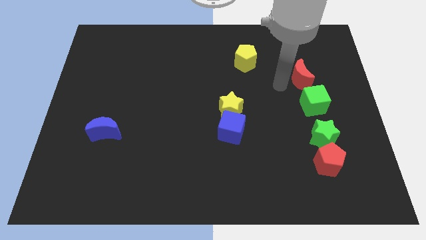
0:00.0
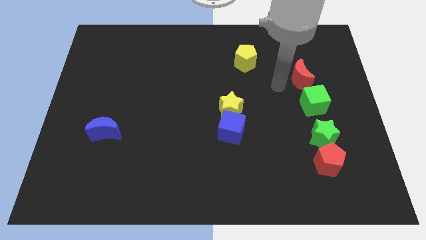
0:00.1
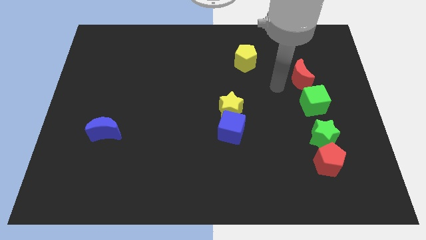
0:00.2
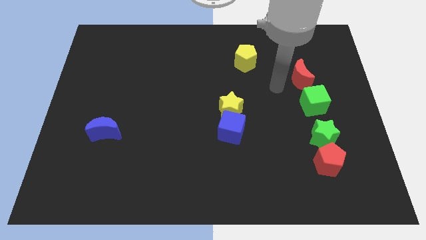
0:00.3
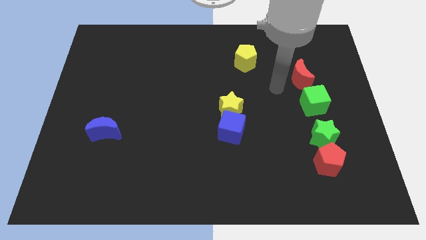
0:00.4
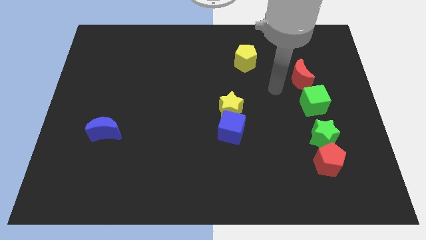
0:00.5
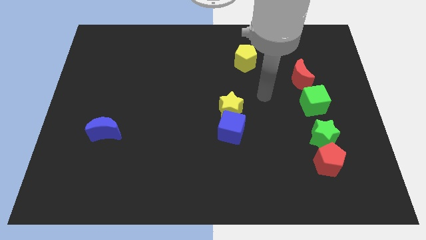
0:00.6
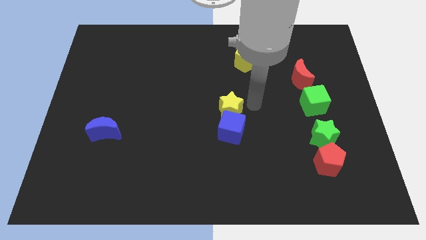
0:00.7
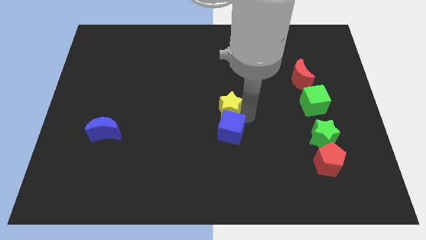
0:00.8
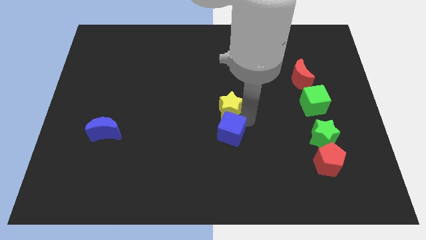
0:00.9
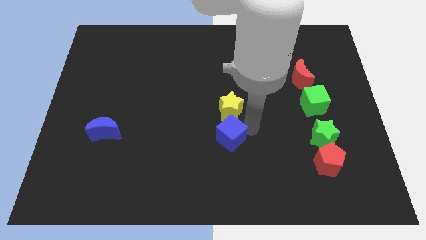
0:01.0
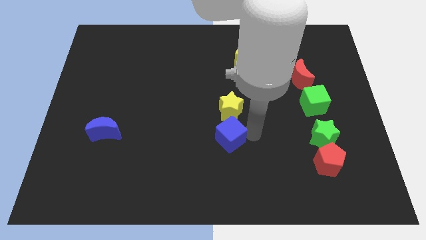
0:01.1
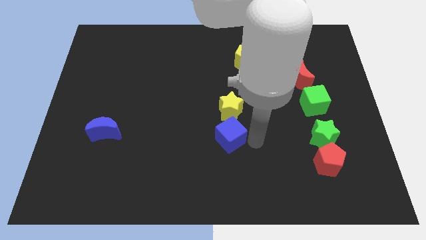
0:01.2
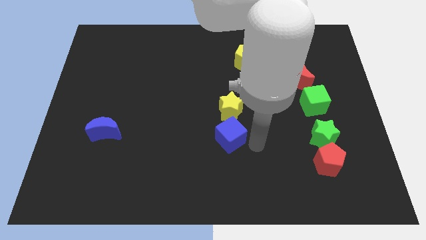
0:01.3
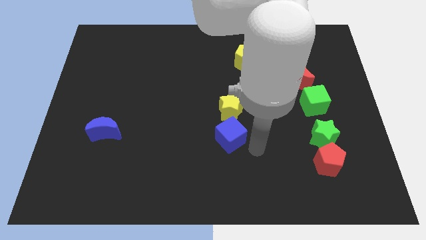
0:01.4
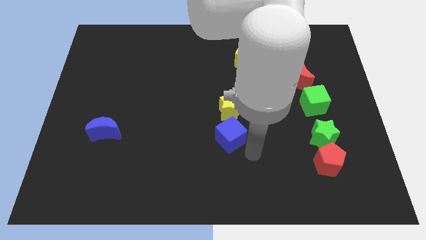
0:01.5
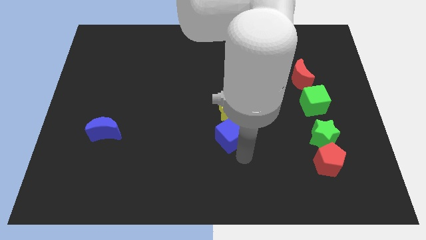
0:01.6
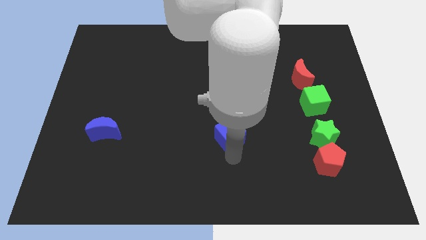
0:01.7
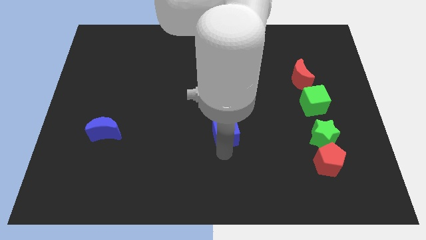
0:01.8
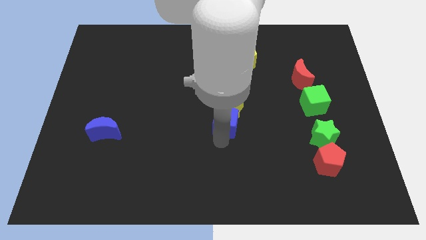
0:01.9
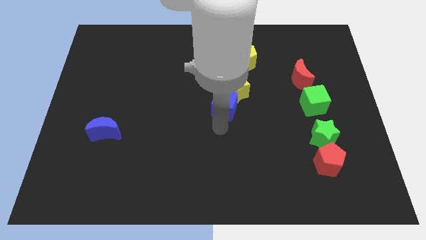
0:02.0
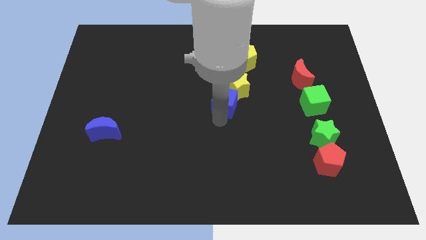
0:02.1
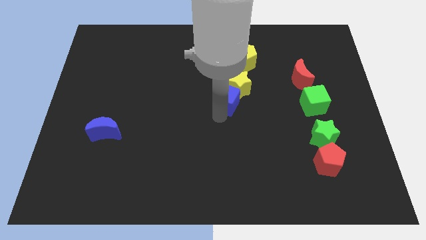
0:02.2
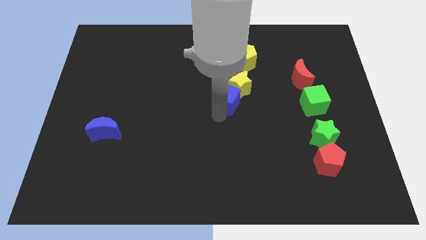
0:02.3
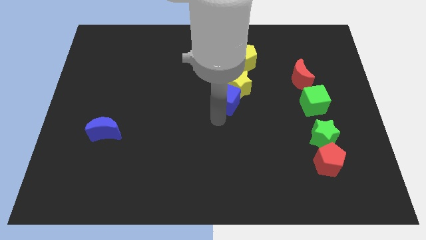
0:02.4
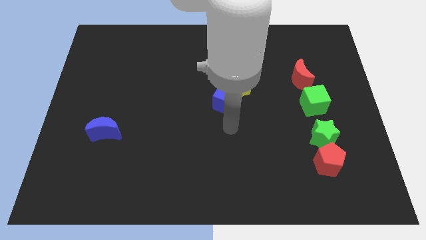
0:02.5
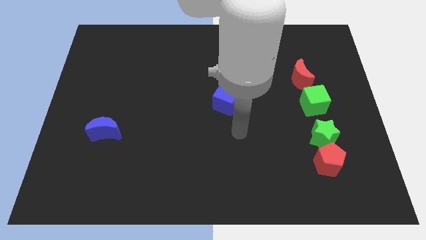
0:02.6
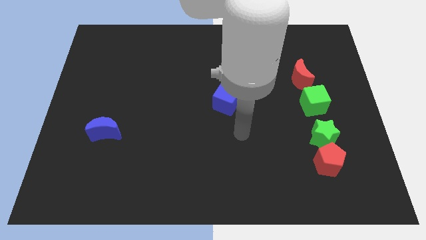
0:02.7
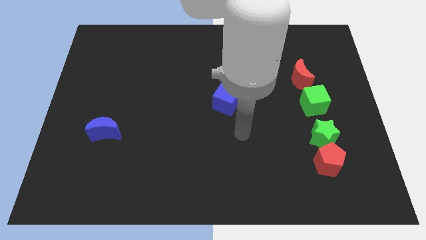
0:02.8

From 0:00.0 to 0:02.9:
push the blue cube below the yellow star

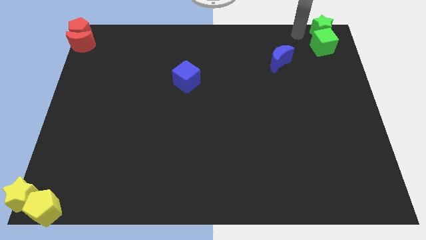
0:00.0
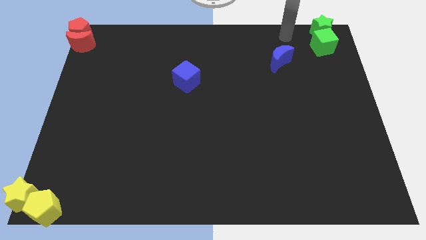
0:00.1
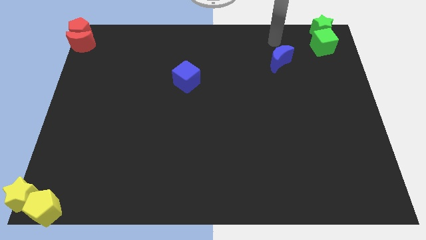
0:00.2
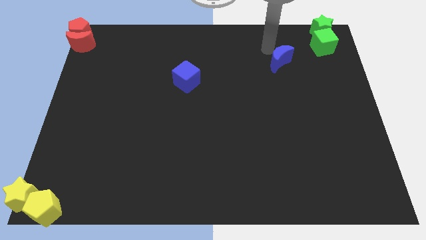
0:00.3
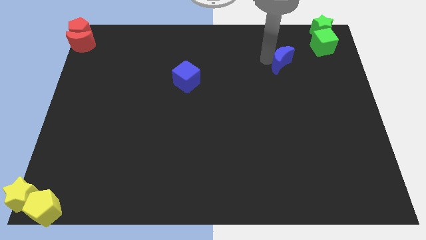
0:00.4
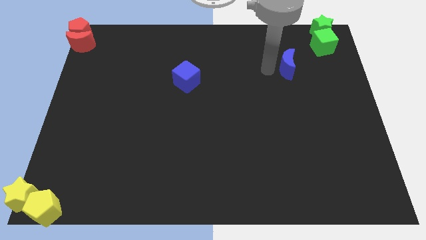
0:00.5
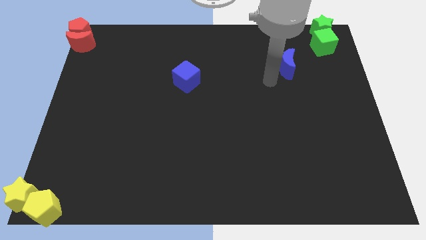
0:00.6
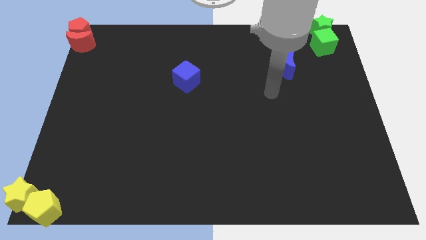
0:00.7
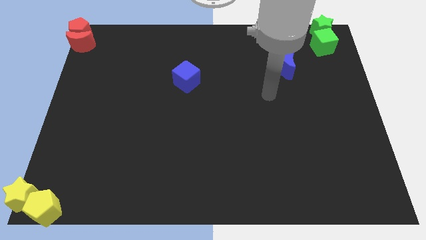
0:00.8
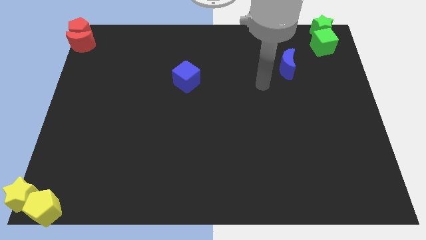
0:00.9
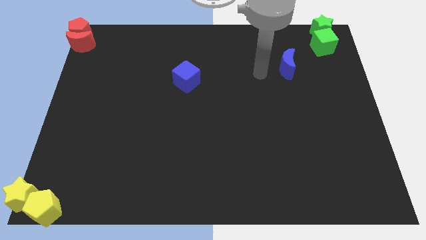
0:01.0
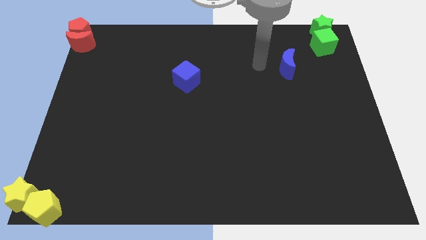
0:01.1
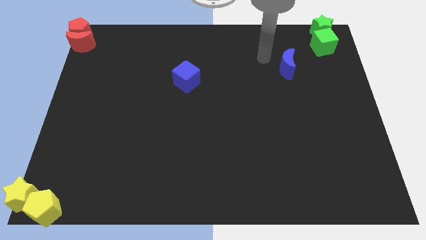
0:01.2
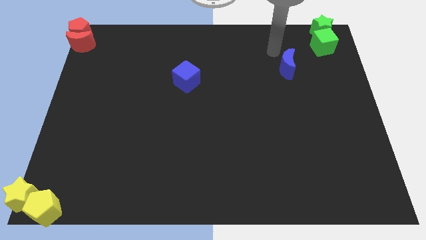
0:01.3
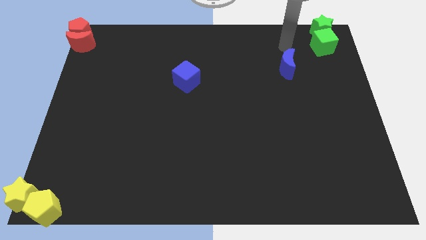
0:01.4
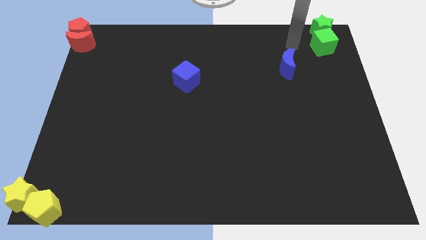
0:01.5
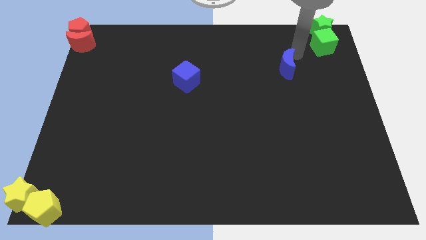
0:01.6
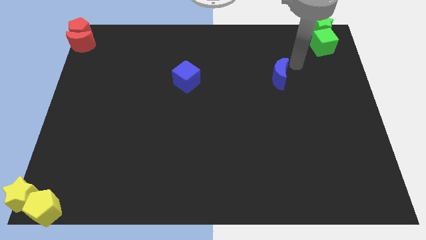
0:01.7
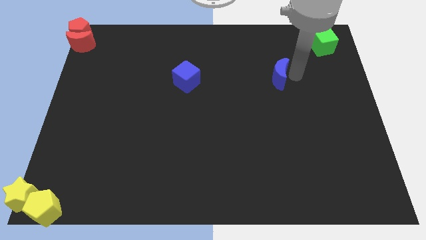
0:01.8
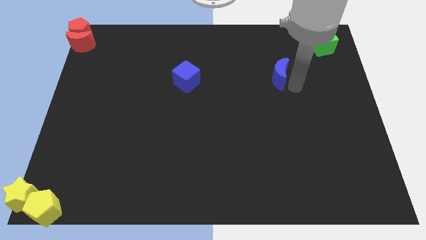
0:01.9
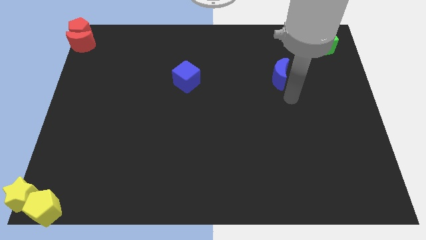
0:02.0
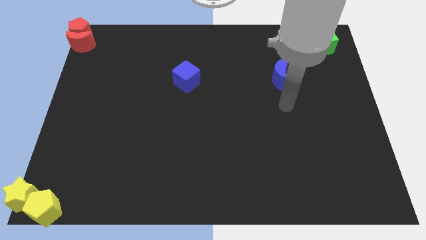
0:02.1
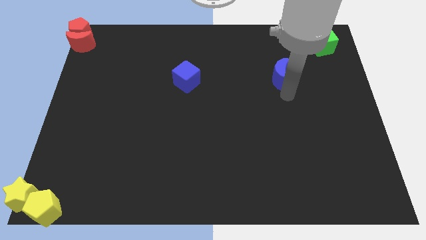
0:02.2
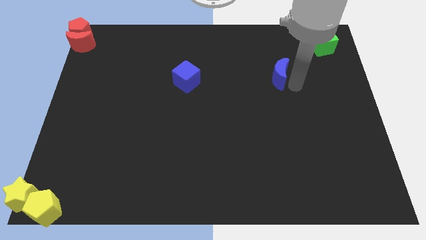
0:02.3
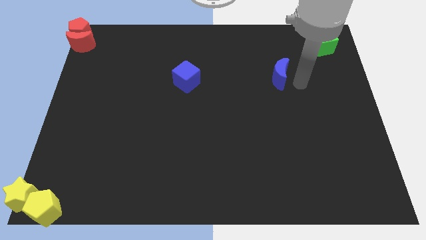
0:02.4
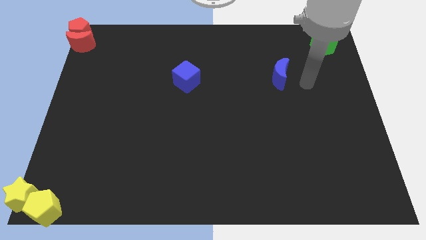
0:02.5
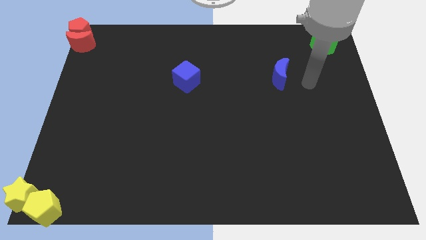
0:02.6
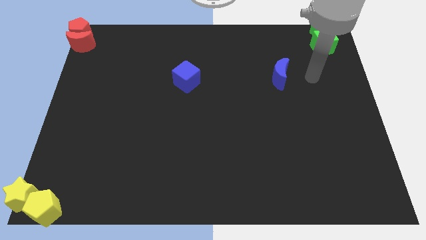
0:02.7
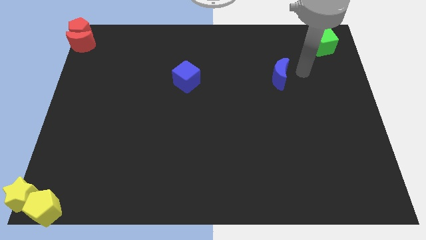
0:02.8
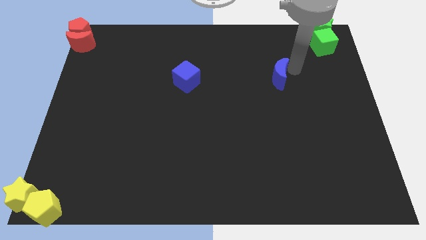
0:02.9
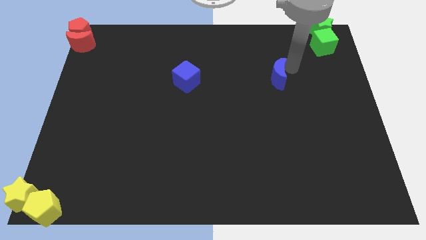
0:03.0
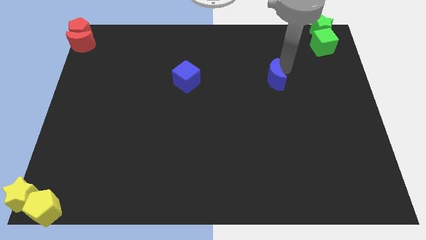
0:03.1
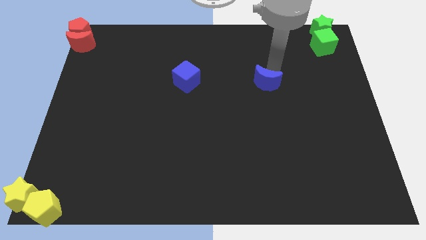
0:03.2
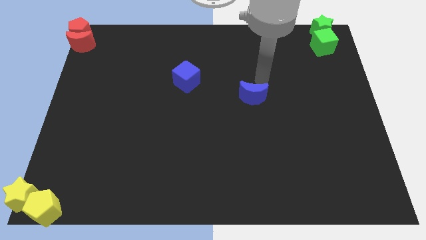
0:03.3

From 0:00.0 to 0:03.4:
move the blue crescent parallel to the right of the blue cube

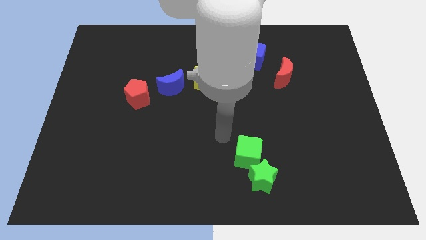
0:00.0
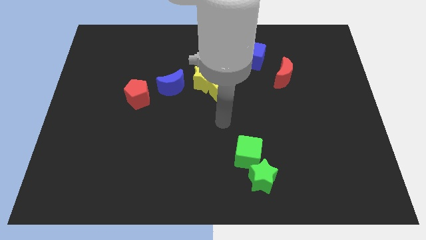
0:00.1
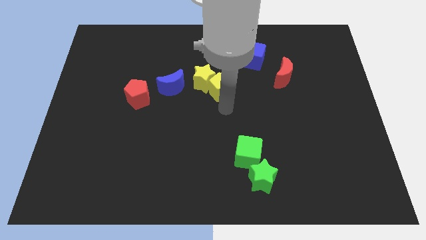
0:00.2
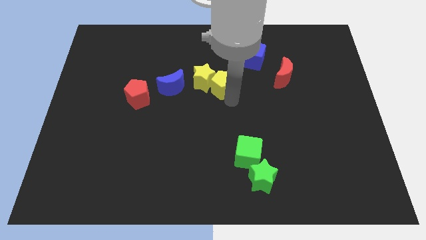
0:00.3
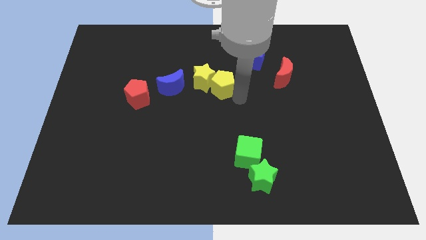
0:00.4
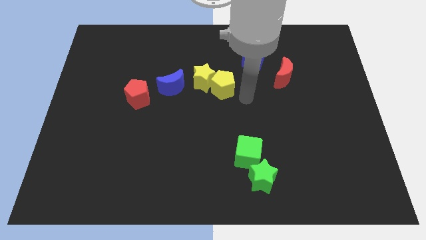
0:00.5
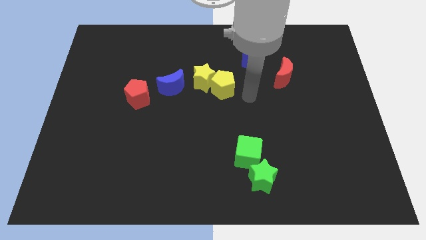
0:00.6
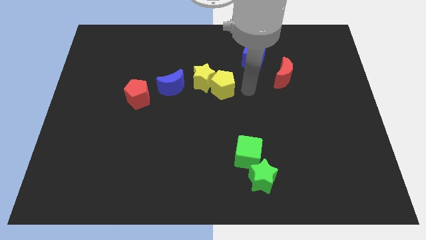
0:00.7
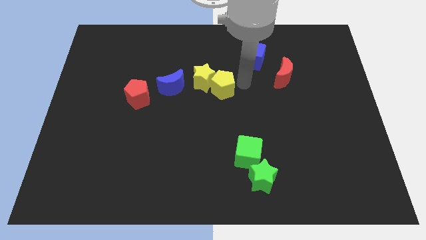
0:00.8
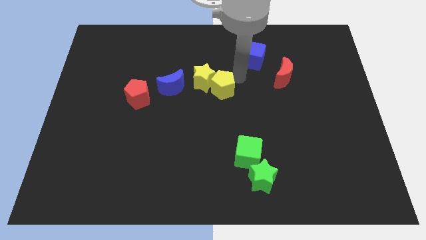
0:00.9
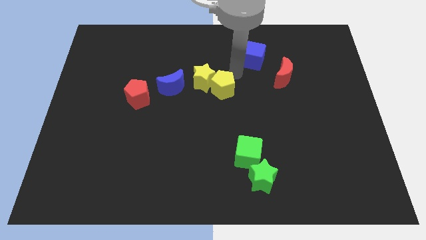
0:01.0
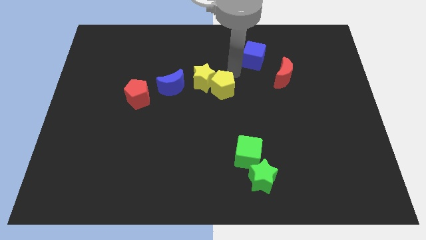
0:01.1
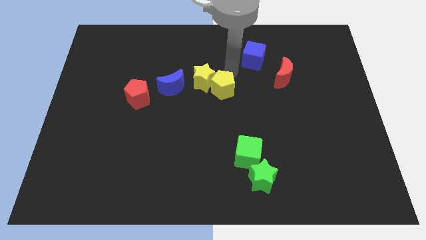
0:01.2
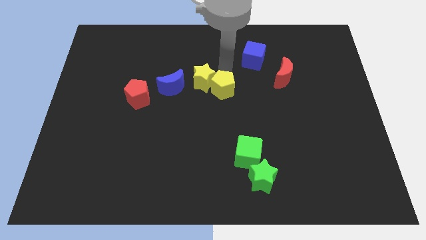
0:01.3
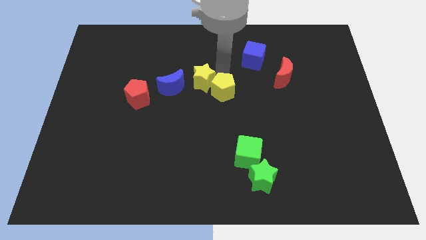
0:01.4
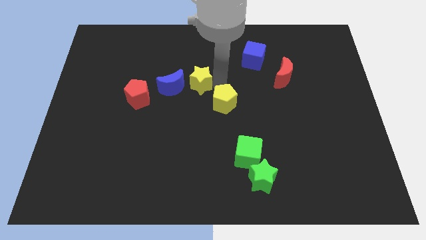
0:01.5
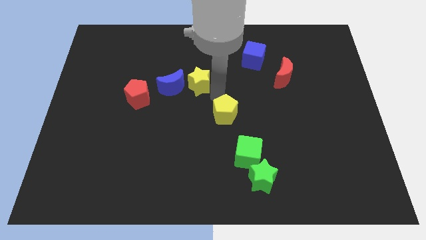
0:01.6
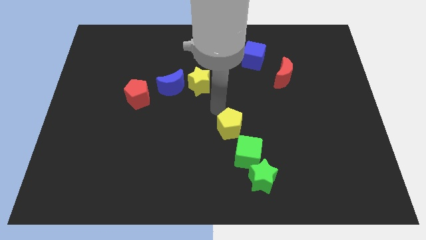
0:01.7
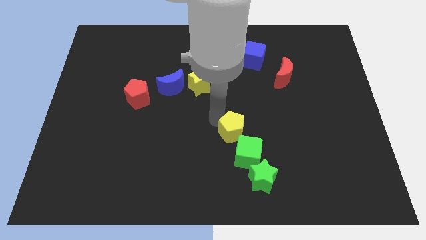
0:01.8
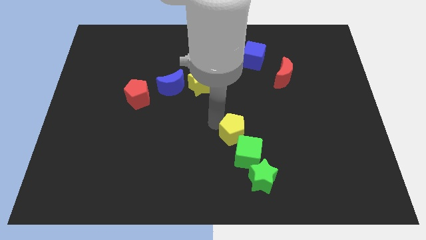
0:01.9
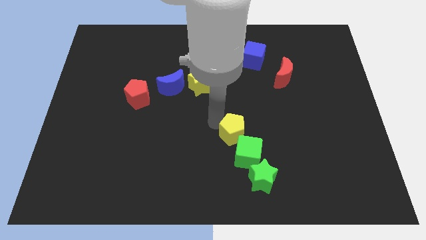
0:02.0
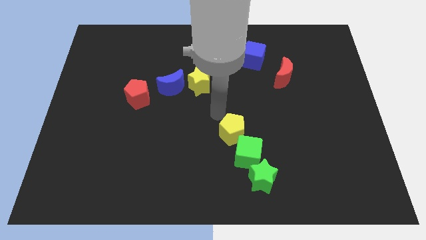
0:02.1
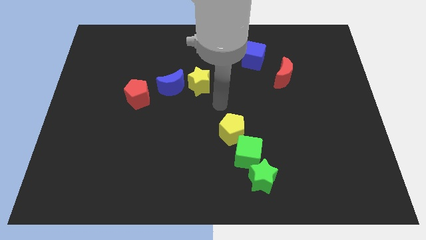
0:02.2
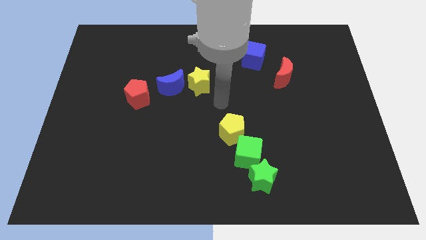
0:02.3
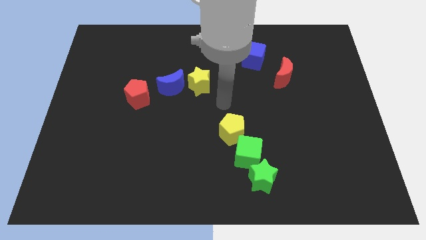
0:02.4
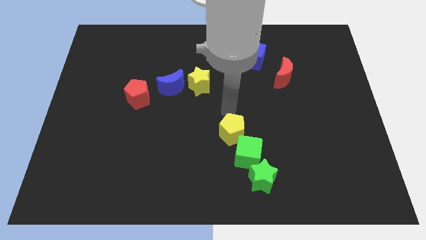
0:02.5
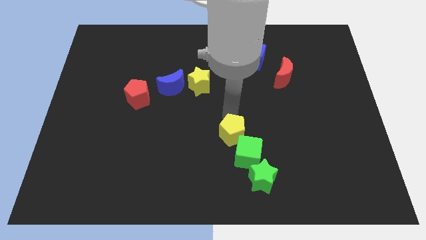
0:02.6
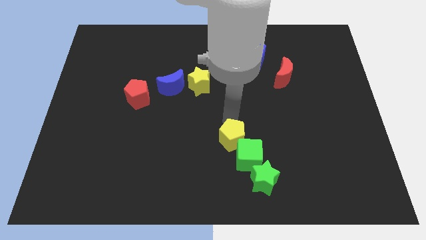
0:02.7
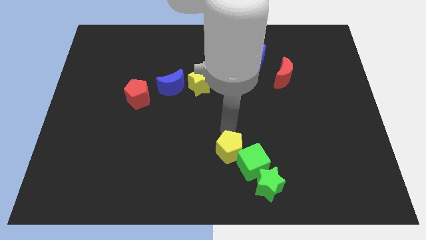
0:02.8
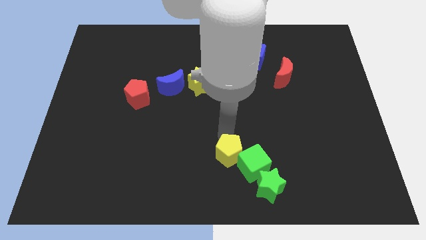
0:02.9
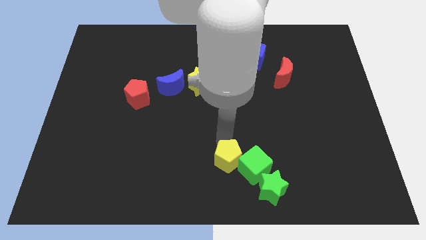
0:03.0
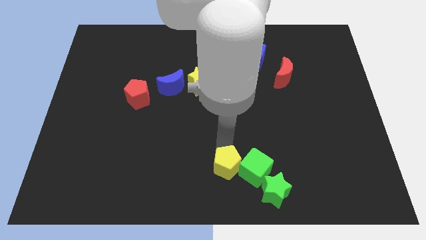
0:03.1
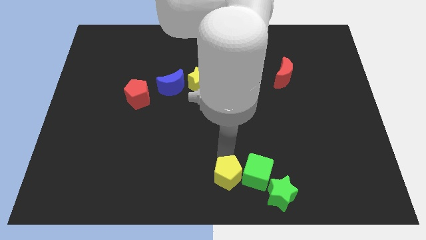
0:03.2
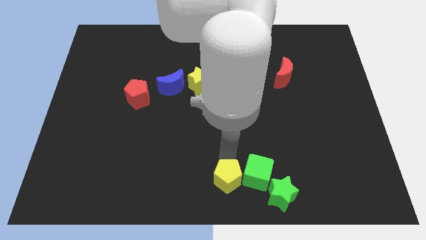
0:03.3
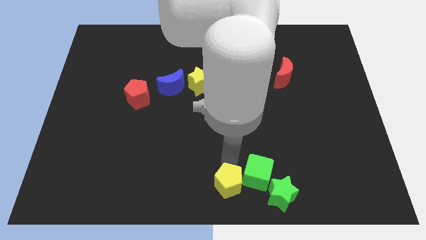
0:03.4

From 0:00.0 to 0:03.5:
move the yellow pentagon to the left of the green cube
